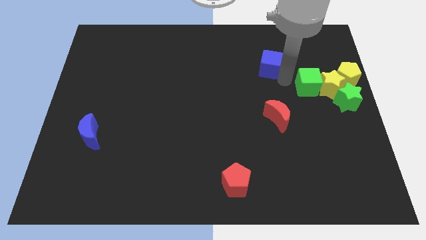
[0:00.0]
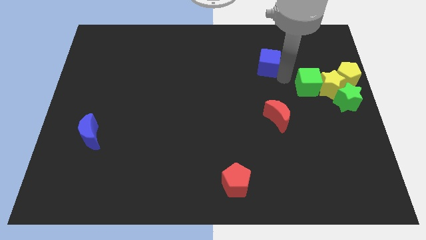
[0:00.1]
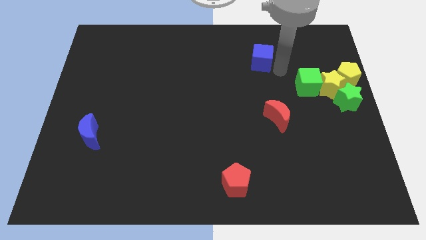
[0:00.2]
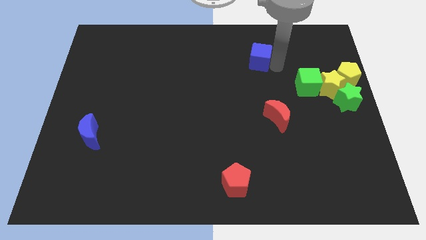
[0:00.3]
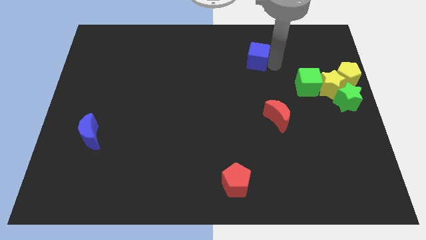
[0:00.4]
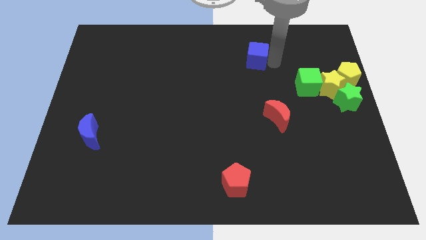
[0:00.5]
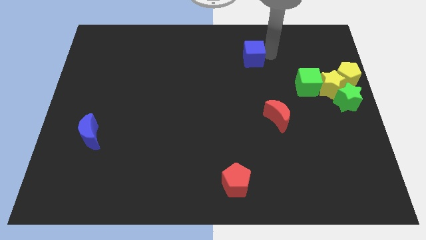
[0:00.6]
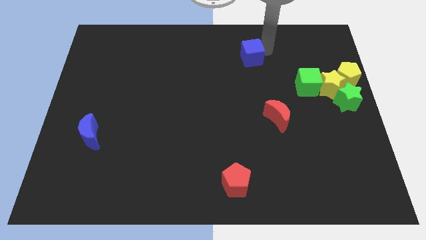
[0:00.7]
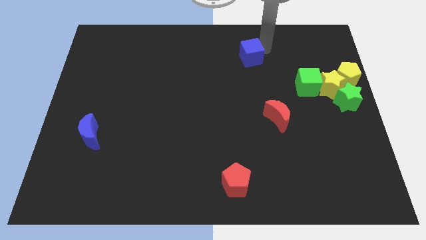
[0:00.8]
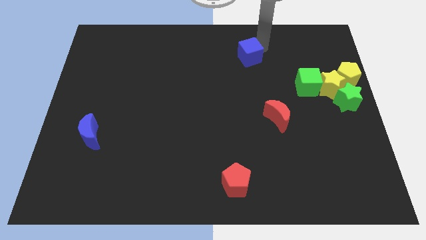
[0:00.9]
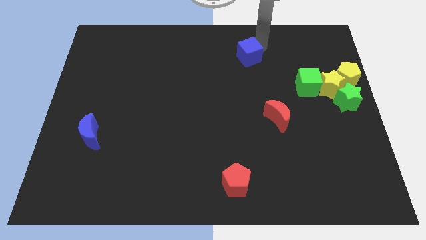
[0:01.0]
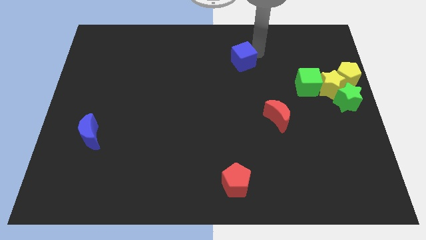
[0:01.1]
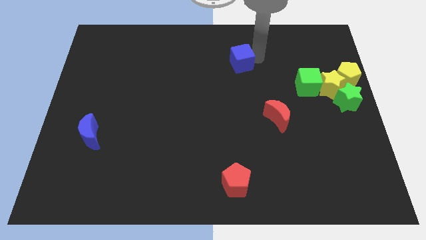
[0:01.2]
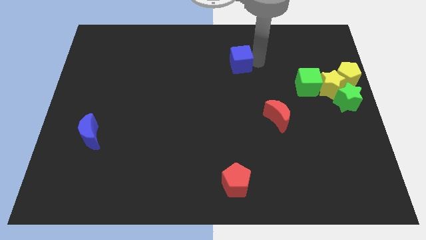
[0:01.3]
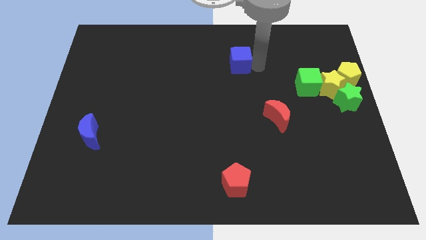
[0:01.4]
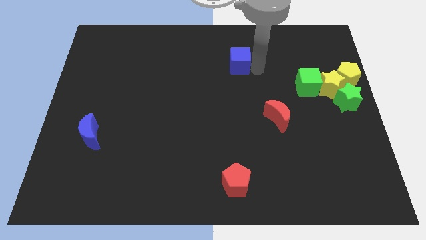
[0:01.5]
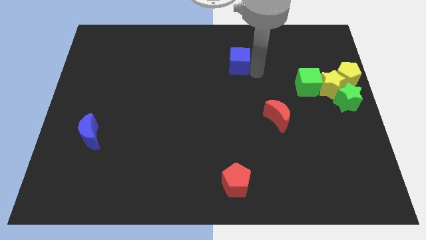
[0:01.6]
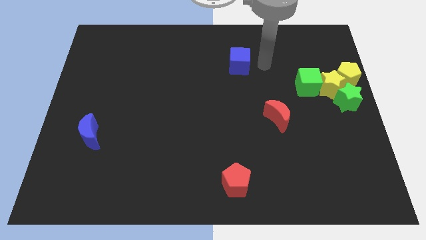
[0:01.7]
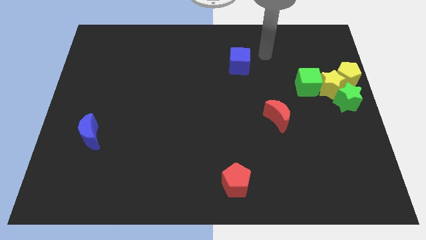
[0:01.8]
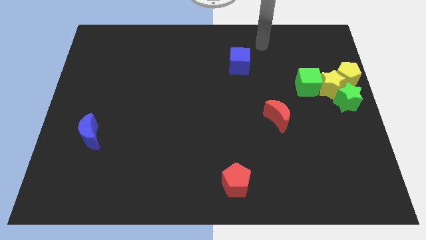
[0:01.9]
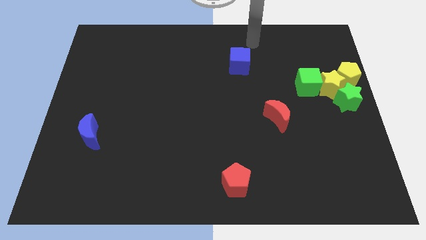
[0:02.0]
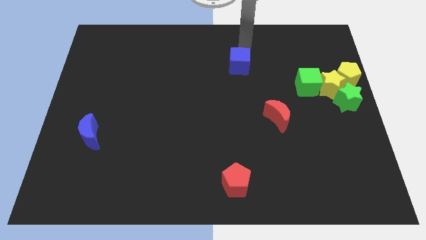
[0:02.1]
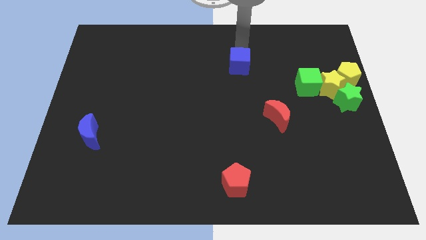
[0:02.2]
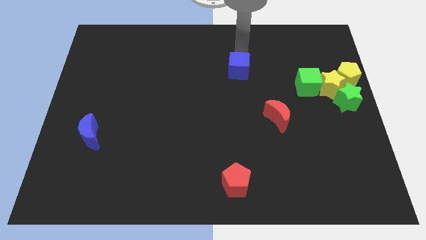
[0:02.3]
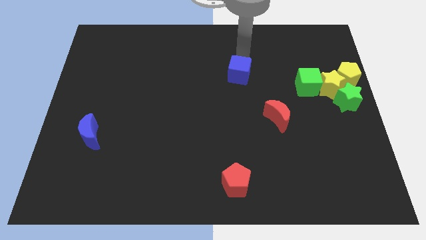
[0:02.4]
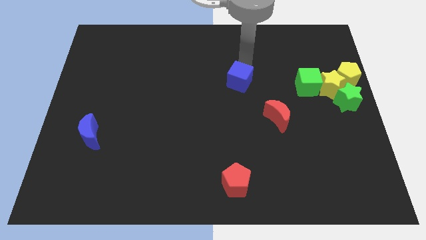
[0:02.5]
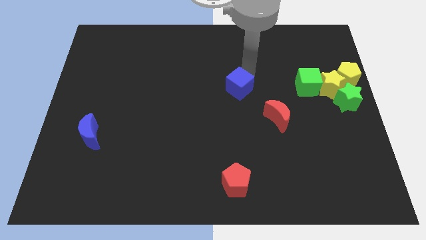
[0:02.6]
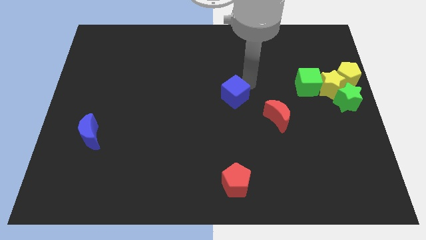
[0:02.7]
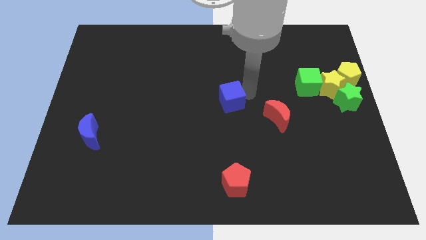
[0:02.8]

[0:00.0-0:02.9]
place blue cube to the center

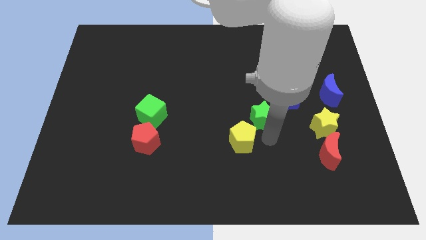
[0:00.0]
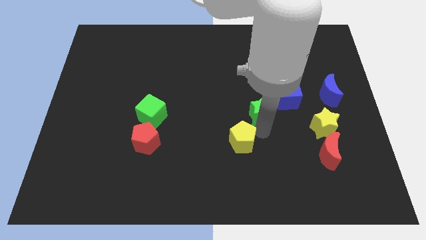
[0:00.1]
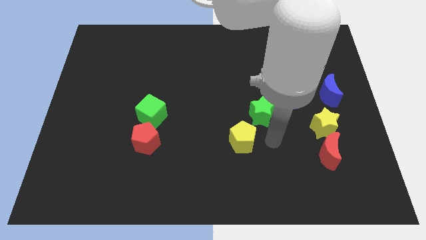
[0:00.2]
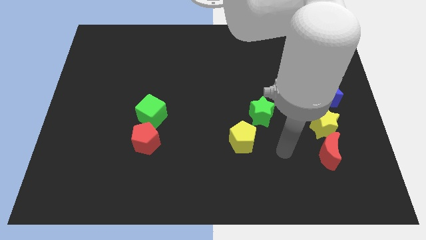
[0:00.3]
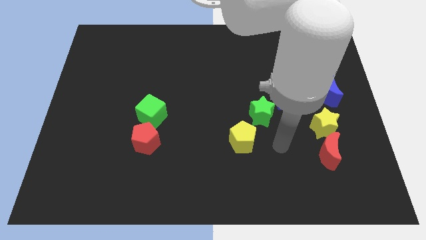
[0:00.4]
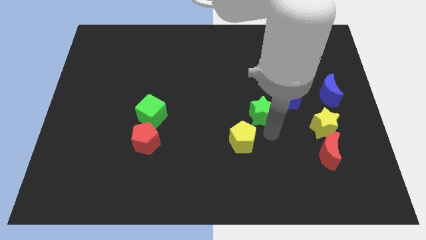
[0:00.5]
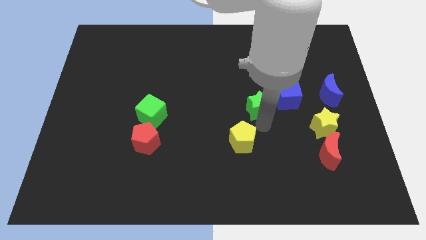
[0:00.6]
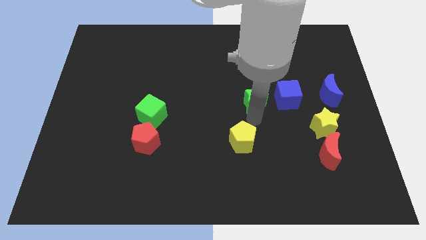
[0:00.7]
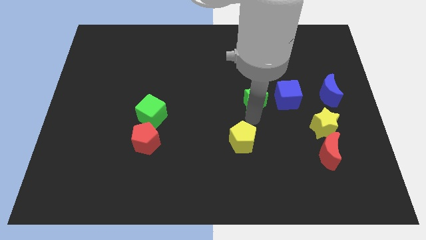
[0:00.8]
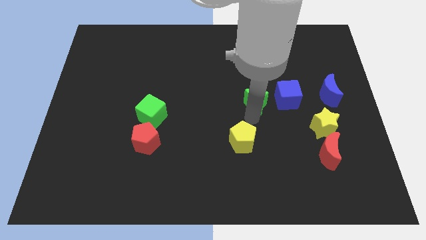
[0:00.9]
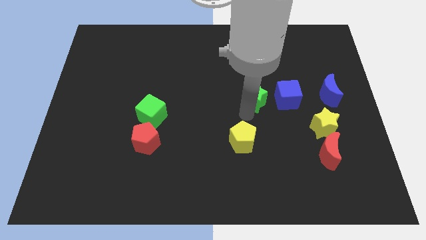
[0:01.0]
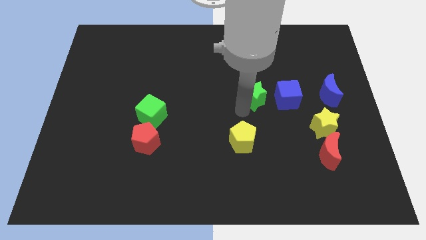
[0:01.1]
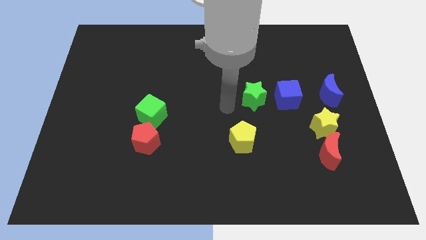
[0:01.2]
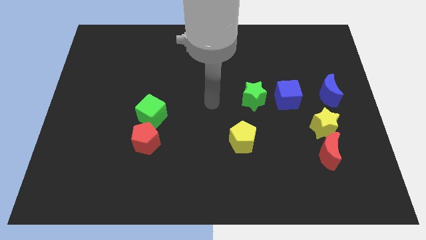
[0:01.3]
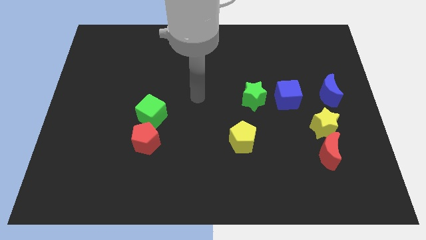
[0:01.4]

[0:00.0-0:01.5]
put the green star to the left side of blue cube

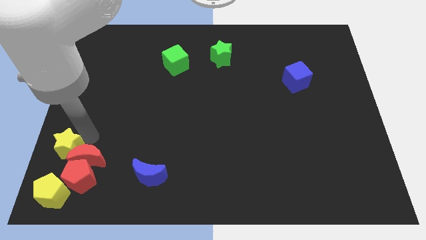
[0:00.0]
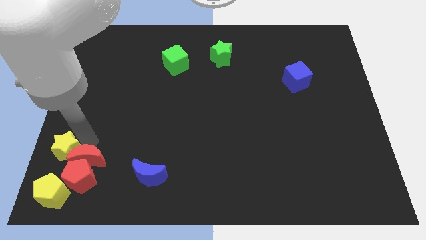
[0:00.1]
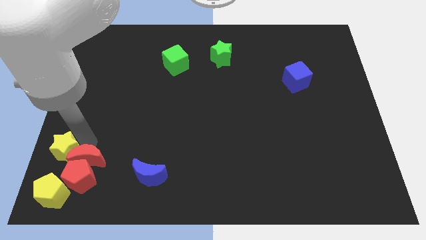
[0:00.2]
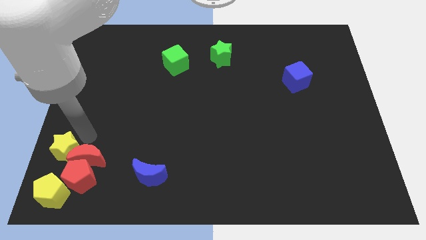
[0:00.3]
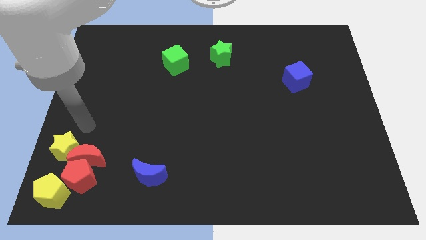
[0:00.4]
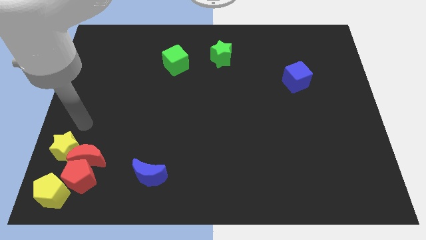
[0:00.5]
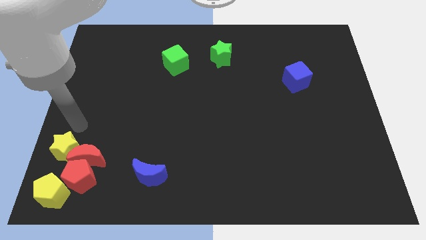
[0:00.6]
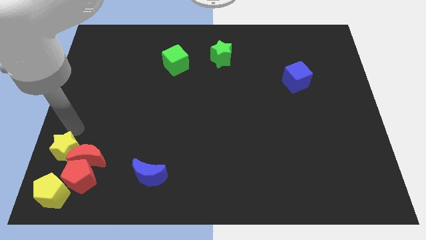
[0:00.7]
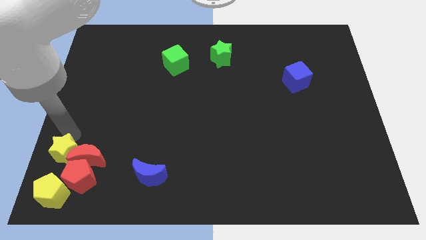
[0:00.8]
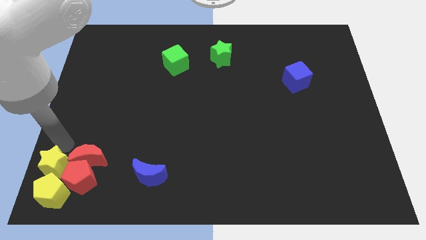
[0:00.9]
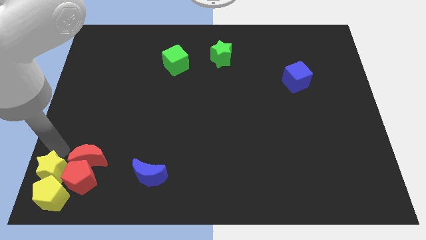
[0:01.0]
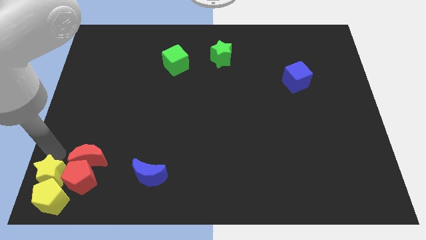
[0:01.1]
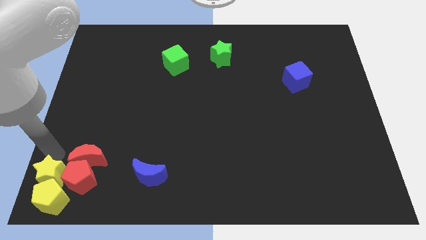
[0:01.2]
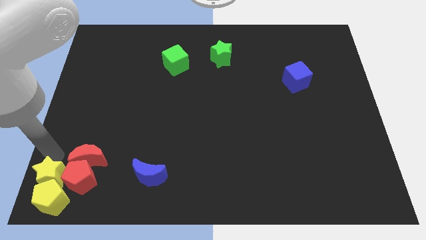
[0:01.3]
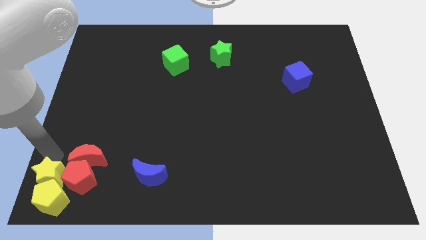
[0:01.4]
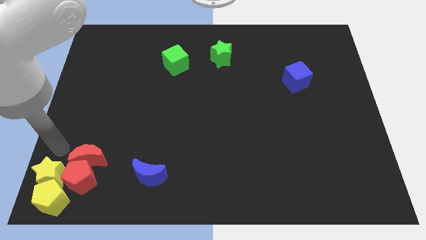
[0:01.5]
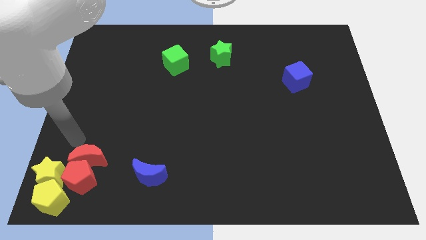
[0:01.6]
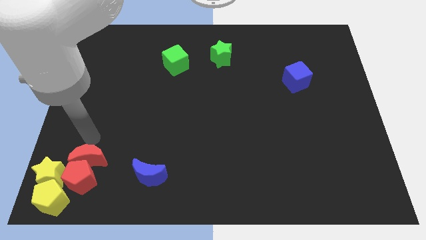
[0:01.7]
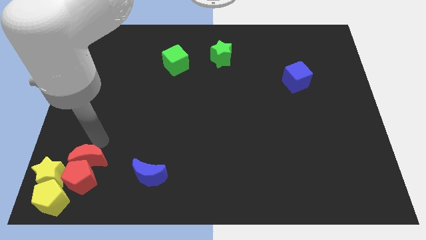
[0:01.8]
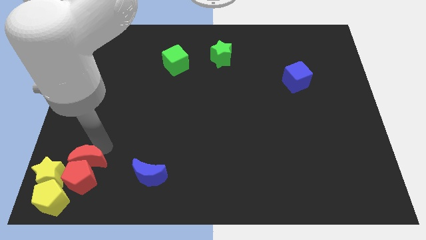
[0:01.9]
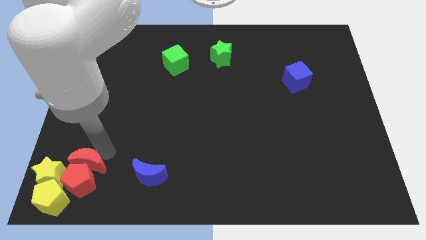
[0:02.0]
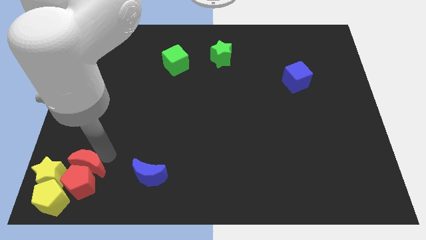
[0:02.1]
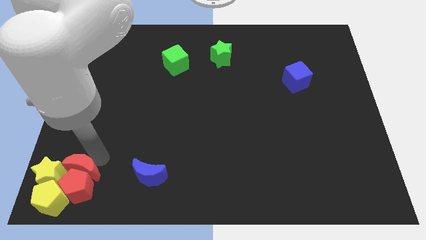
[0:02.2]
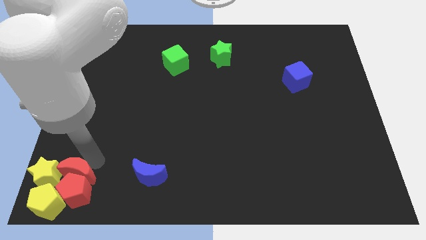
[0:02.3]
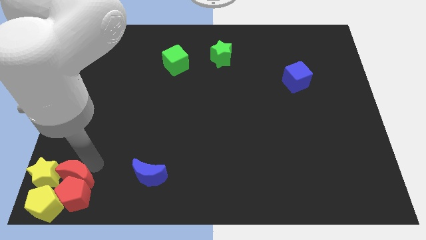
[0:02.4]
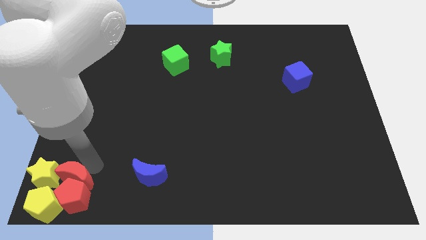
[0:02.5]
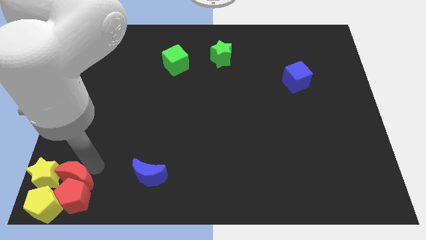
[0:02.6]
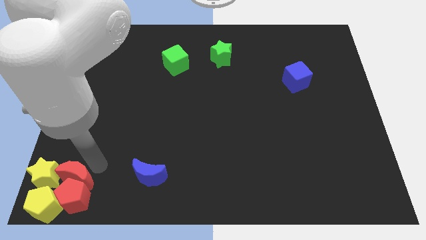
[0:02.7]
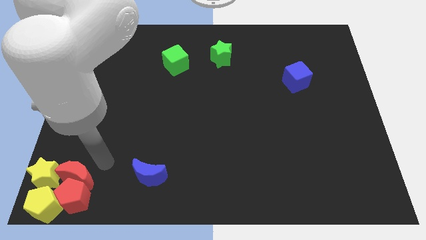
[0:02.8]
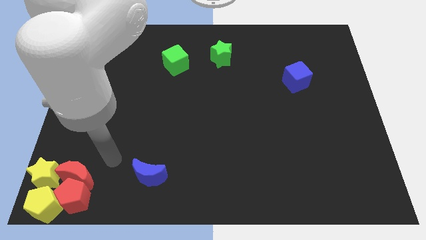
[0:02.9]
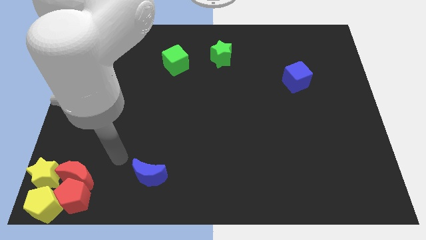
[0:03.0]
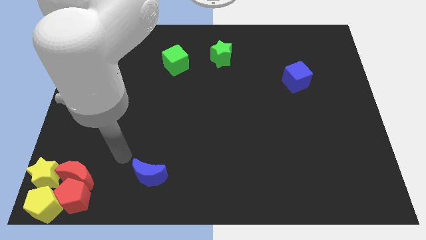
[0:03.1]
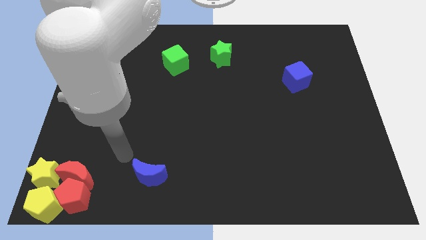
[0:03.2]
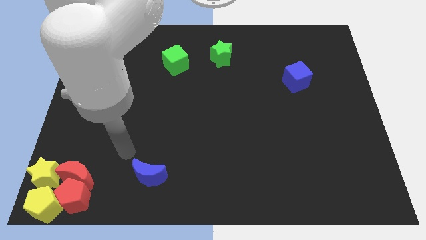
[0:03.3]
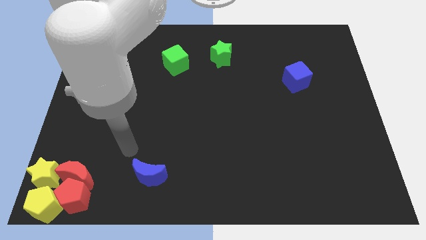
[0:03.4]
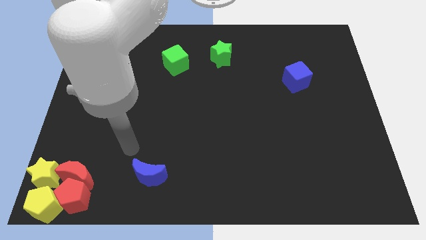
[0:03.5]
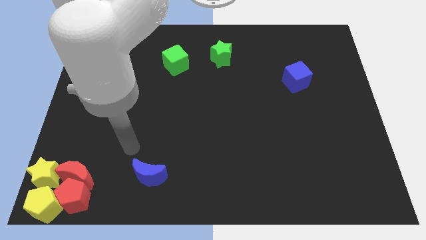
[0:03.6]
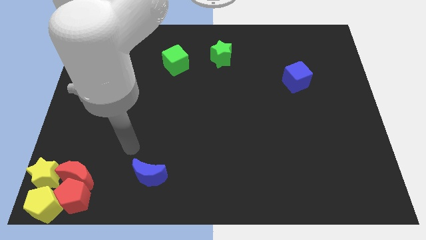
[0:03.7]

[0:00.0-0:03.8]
move yellow blocks along with red blocks to the left bottom

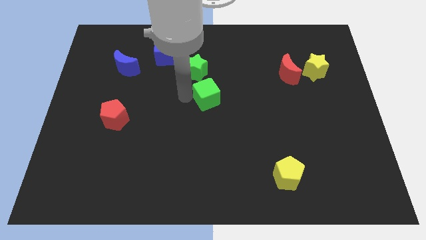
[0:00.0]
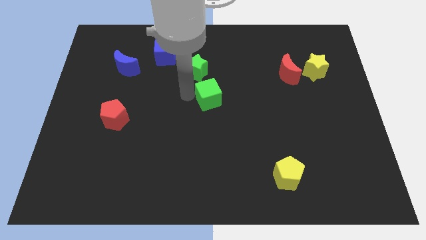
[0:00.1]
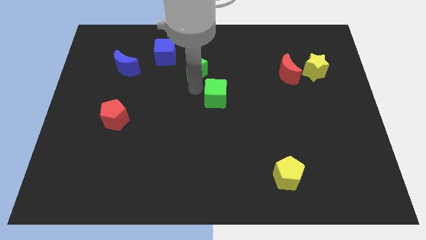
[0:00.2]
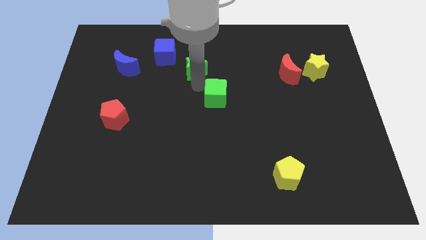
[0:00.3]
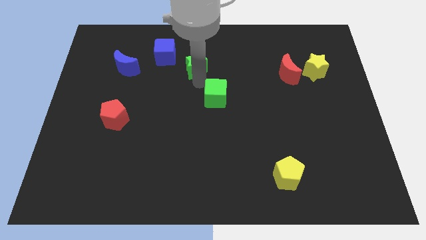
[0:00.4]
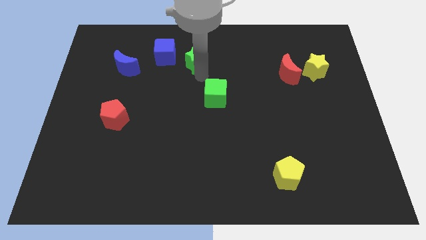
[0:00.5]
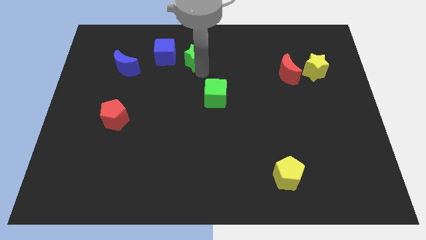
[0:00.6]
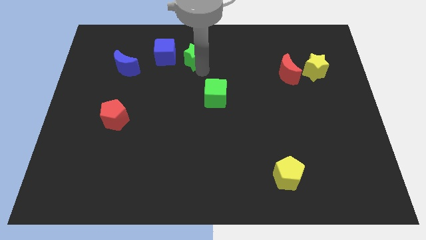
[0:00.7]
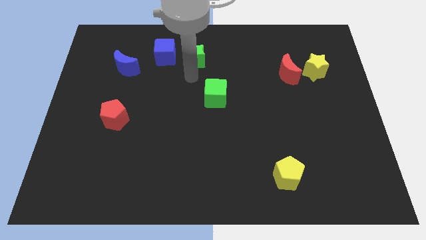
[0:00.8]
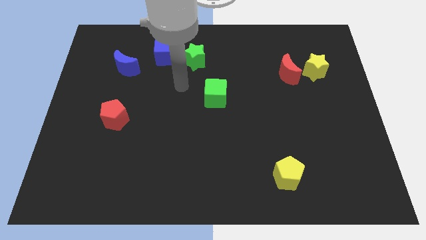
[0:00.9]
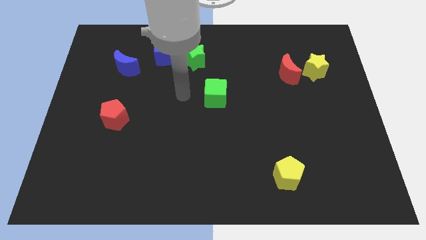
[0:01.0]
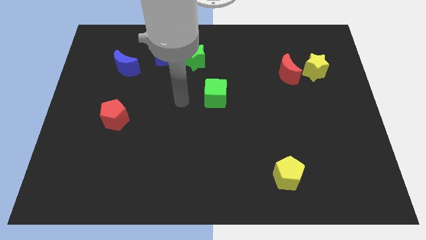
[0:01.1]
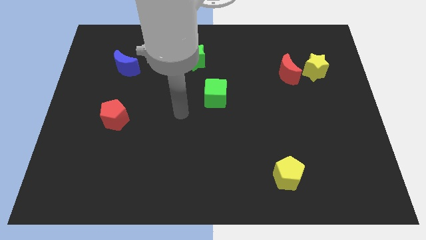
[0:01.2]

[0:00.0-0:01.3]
move the green star to the right of the blue cube
